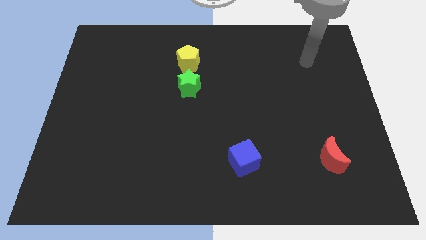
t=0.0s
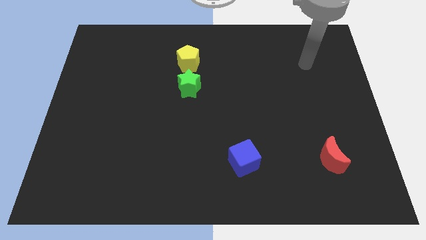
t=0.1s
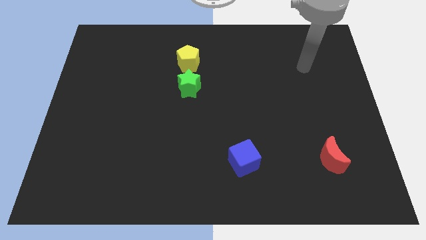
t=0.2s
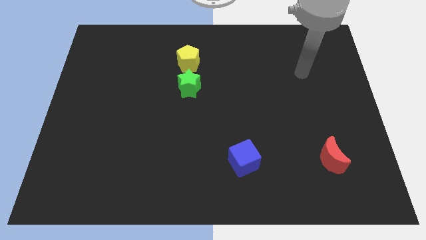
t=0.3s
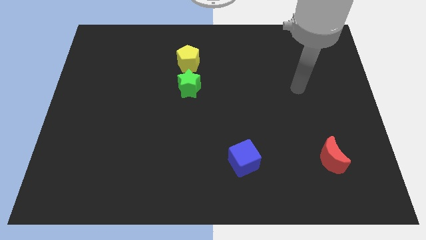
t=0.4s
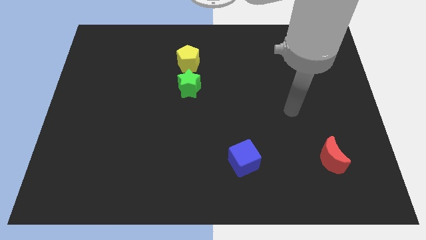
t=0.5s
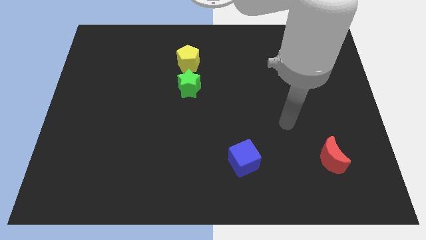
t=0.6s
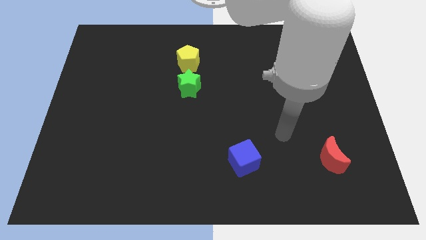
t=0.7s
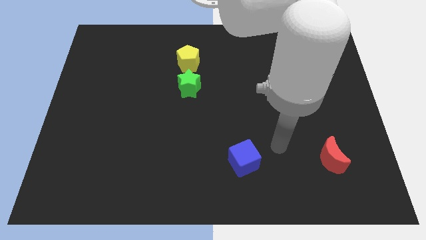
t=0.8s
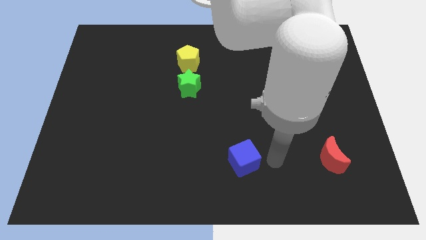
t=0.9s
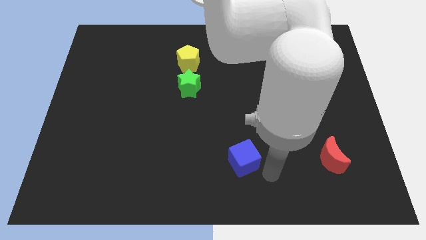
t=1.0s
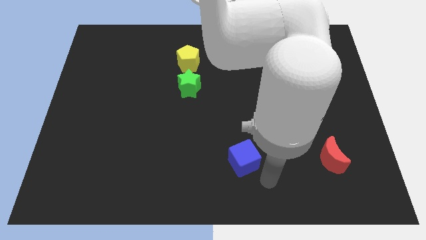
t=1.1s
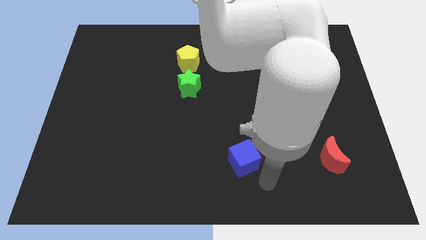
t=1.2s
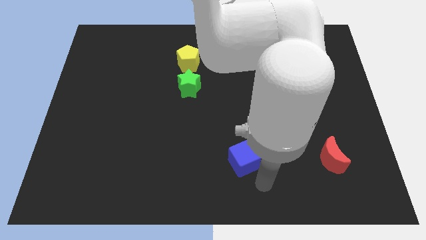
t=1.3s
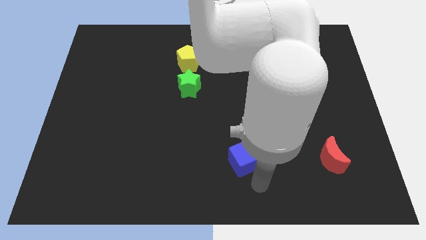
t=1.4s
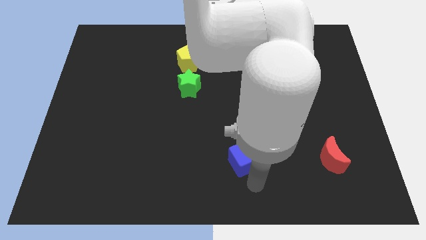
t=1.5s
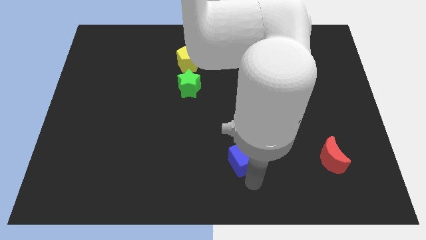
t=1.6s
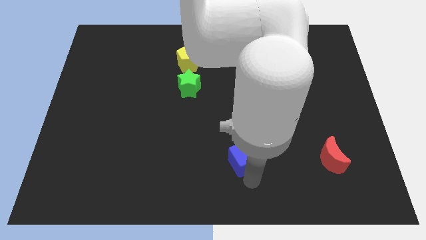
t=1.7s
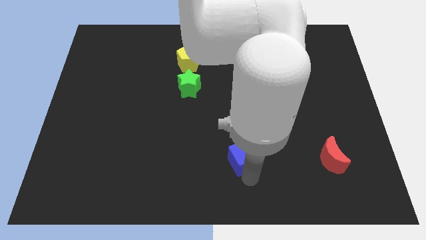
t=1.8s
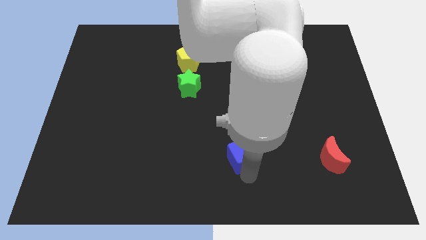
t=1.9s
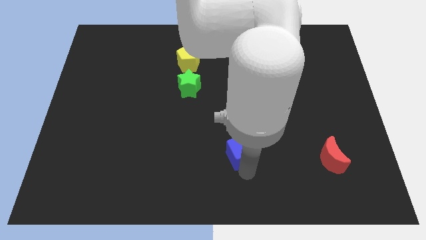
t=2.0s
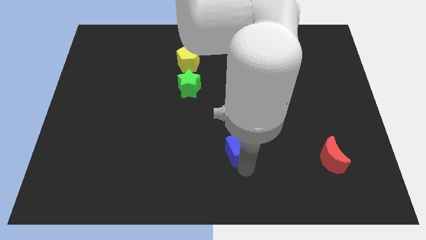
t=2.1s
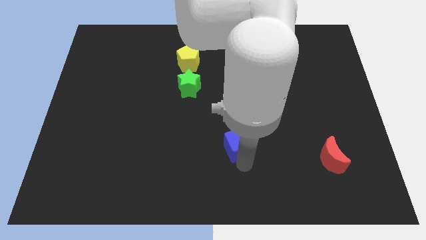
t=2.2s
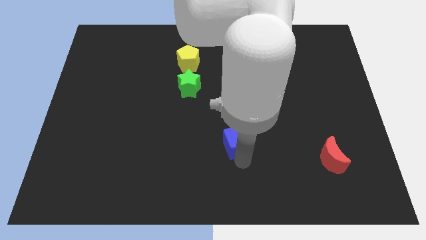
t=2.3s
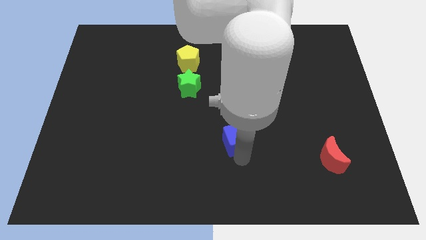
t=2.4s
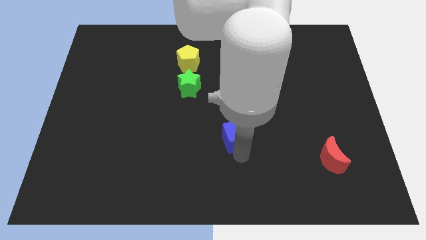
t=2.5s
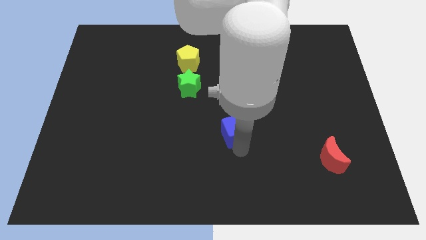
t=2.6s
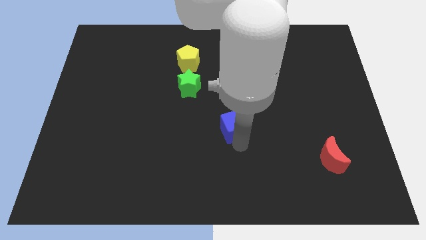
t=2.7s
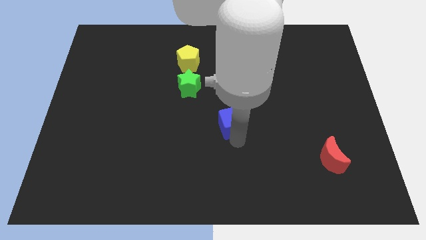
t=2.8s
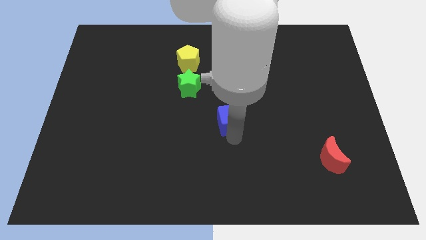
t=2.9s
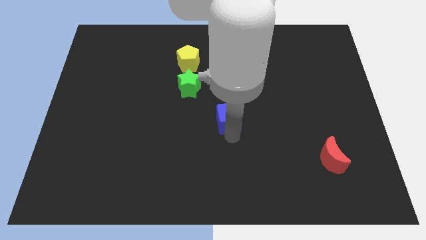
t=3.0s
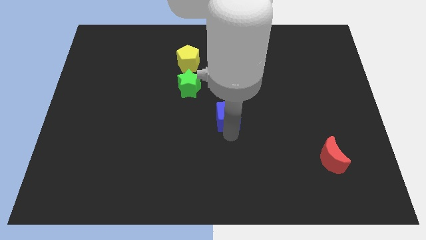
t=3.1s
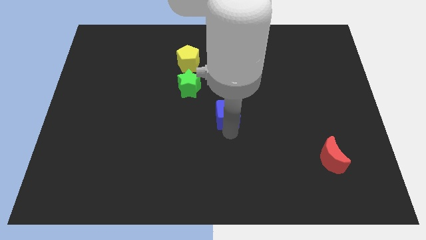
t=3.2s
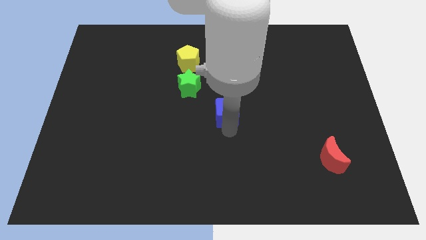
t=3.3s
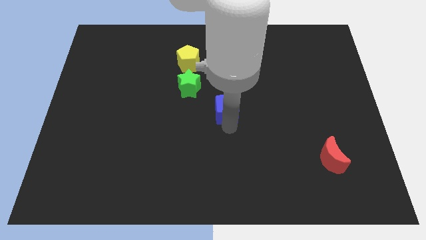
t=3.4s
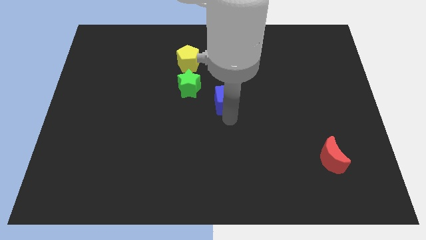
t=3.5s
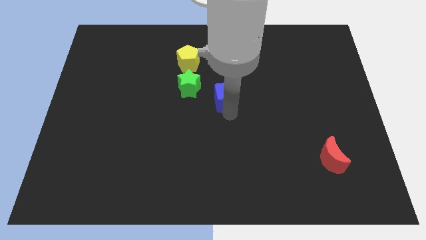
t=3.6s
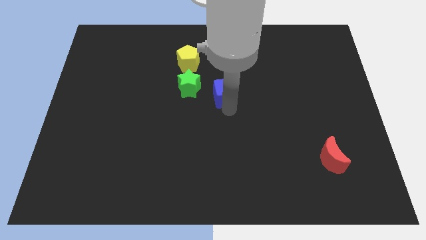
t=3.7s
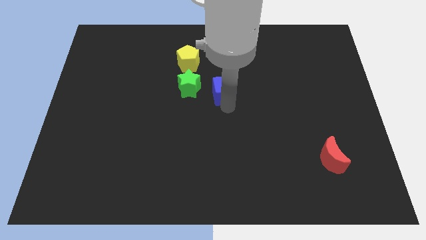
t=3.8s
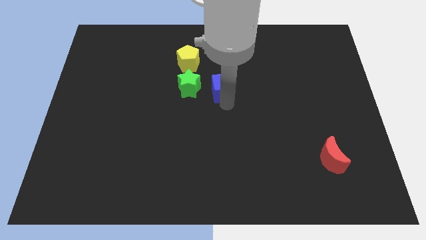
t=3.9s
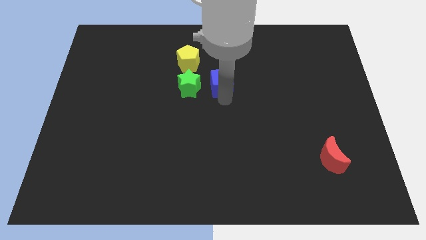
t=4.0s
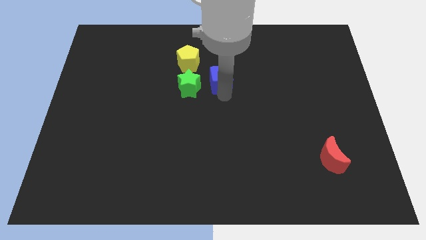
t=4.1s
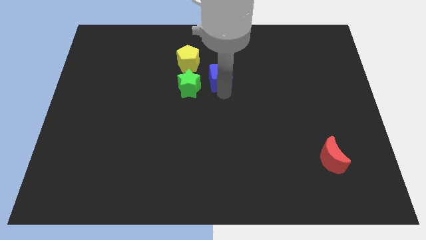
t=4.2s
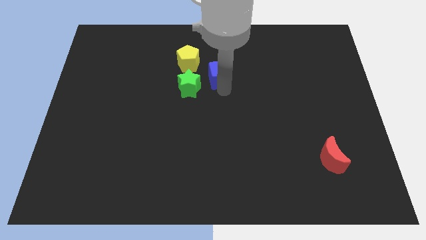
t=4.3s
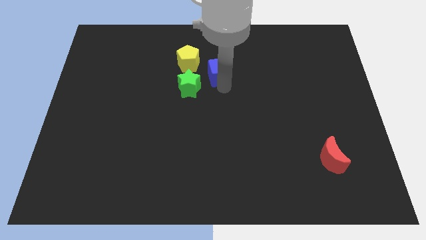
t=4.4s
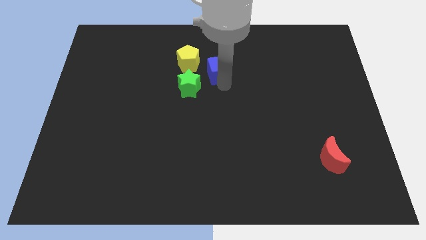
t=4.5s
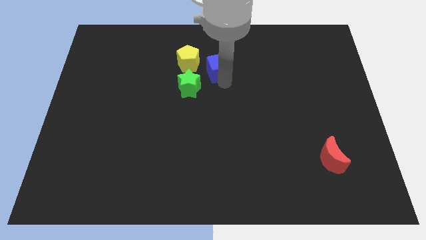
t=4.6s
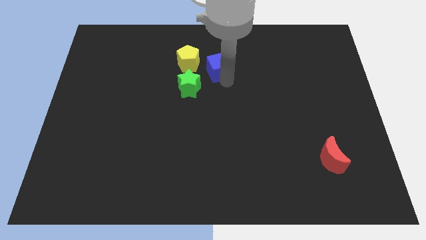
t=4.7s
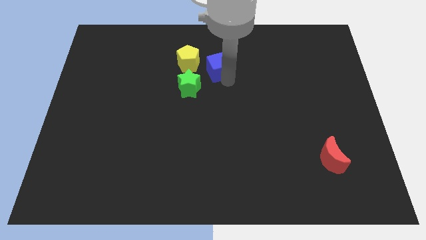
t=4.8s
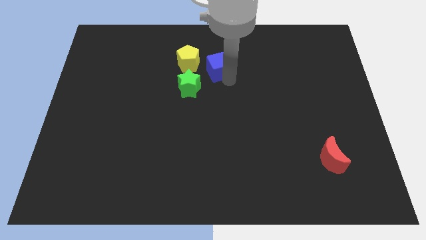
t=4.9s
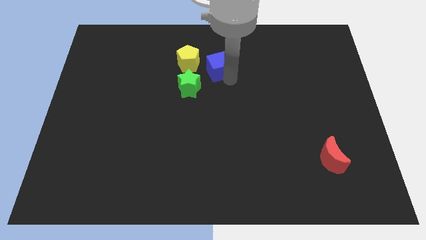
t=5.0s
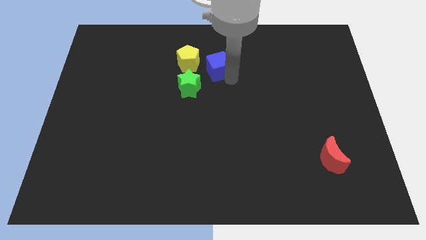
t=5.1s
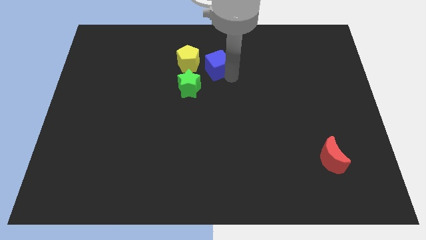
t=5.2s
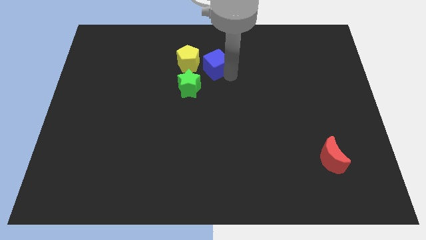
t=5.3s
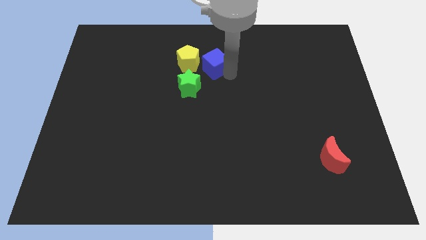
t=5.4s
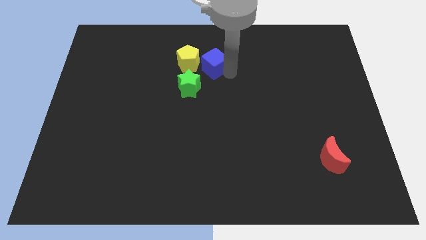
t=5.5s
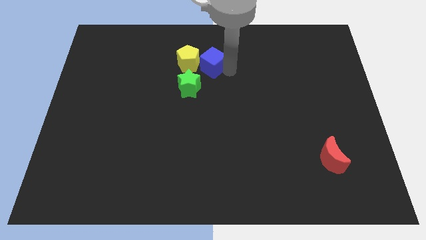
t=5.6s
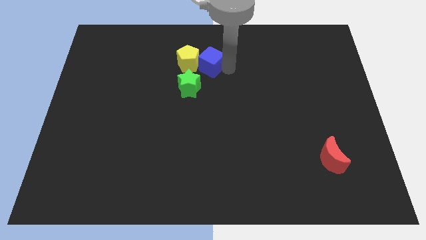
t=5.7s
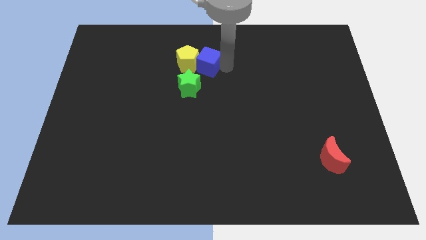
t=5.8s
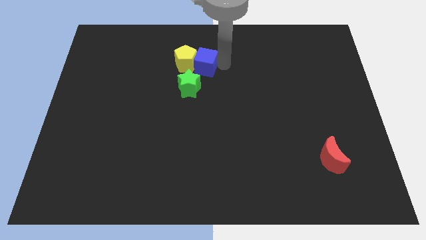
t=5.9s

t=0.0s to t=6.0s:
push the blue block next to the pentagon

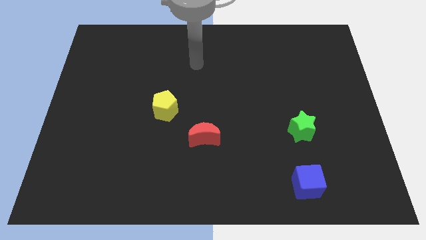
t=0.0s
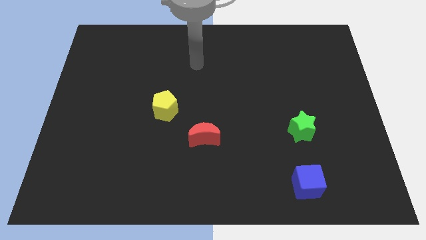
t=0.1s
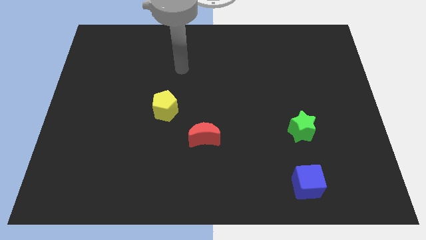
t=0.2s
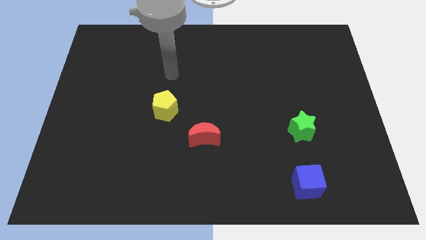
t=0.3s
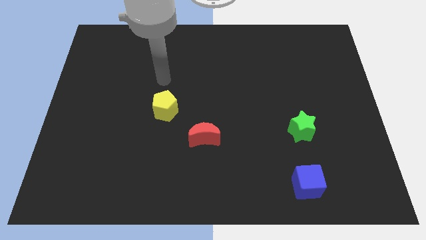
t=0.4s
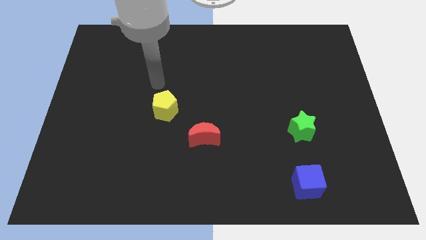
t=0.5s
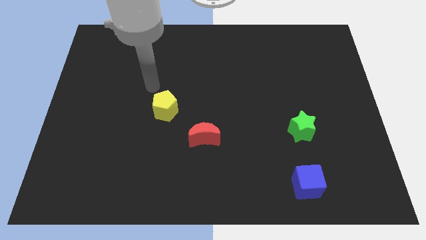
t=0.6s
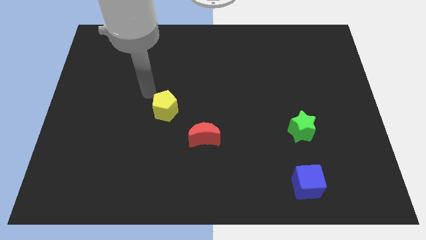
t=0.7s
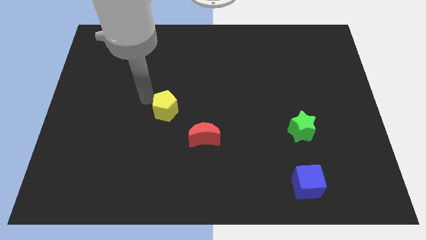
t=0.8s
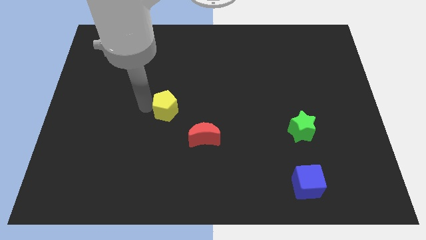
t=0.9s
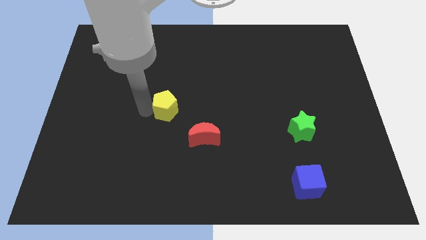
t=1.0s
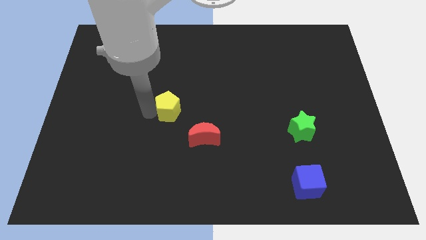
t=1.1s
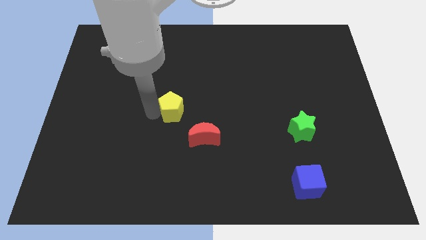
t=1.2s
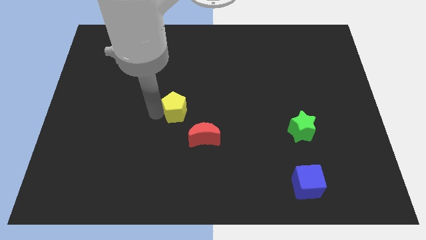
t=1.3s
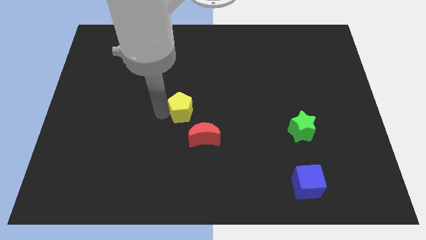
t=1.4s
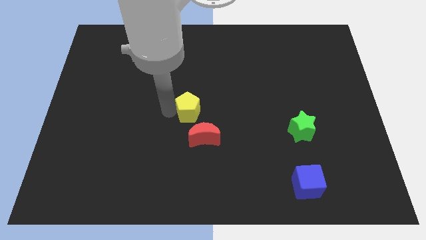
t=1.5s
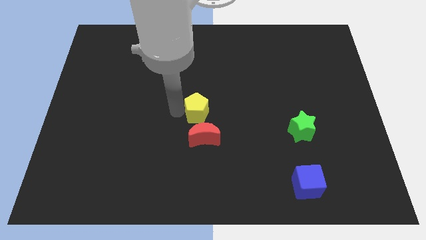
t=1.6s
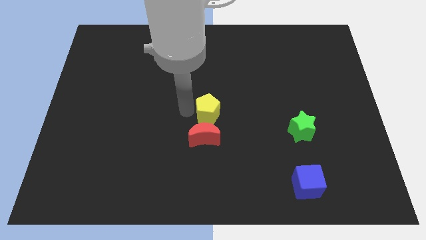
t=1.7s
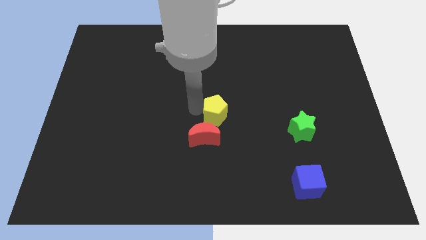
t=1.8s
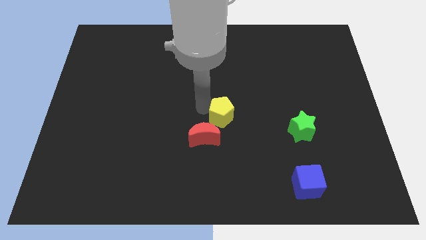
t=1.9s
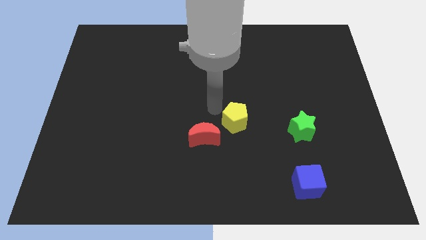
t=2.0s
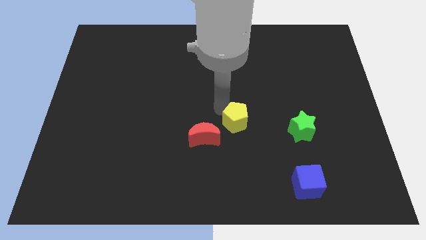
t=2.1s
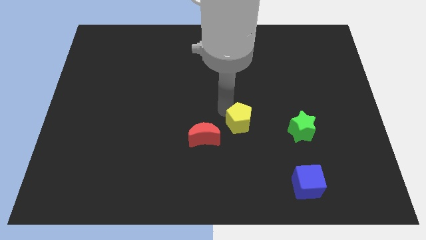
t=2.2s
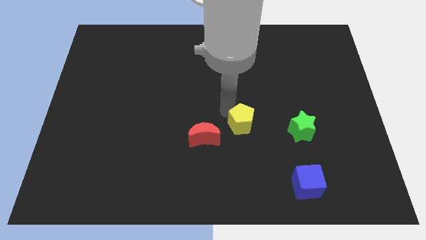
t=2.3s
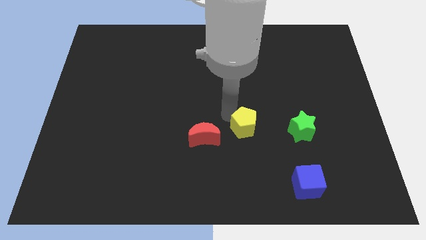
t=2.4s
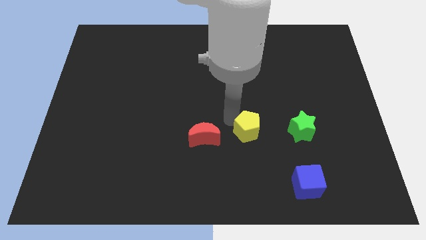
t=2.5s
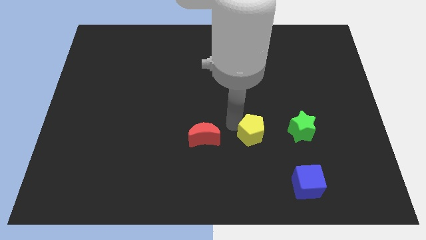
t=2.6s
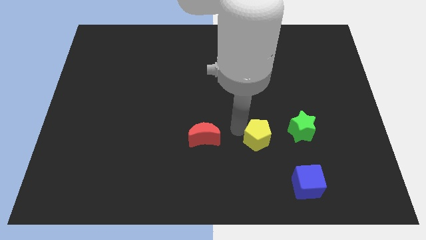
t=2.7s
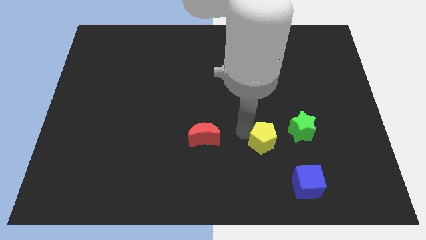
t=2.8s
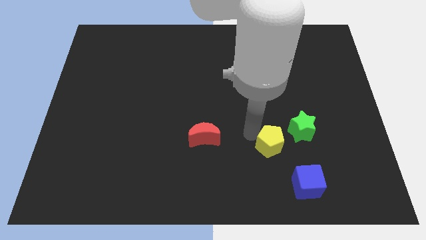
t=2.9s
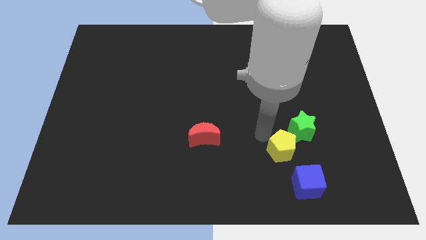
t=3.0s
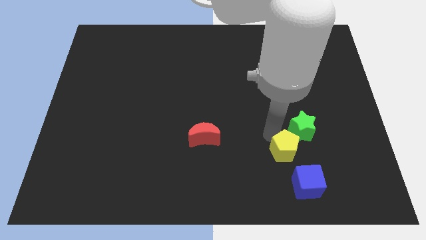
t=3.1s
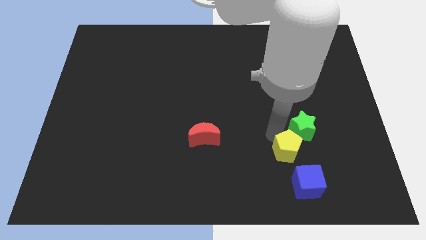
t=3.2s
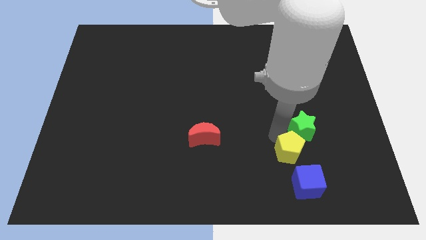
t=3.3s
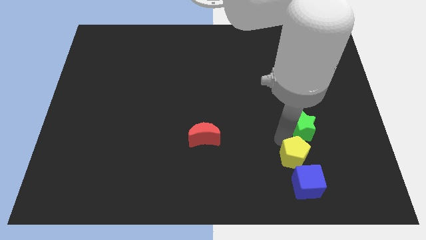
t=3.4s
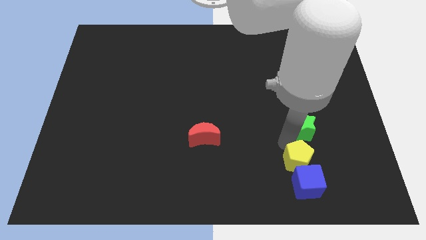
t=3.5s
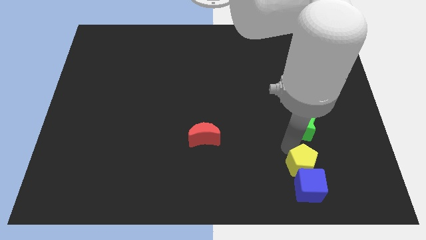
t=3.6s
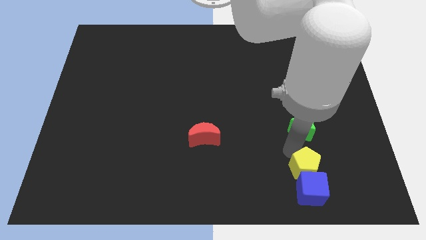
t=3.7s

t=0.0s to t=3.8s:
move the pentagon next to the blue block
